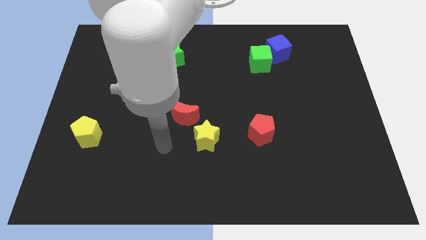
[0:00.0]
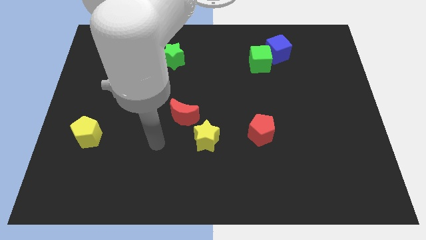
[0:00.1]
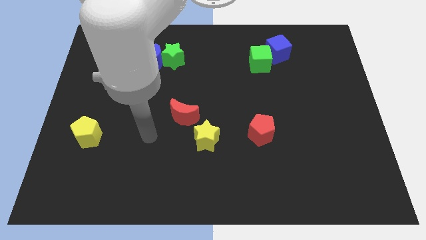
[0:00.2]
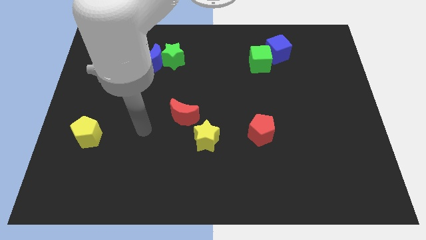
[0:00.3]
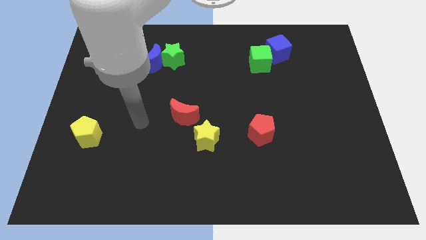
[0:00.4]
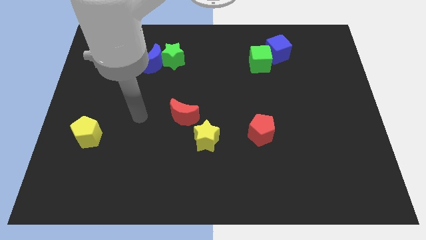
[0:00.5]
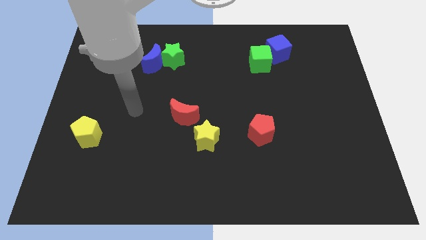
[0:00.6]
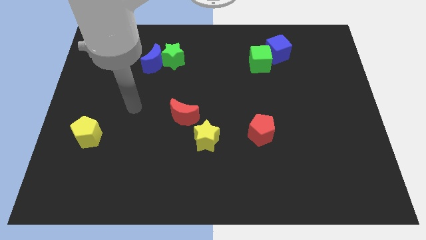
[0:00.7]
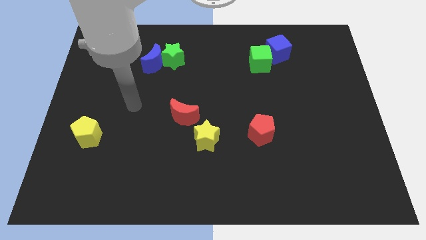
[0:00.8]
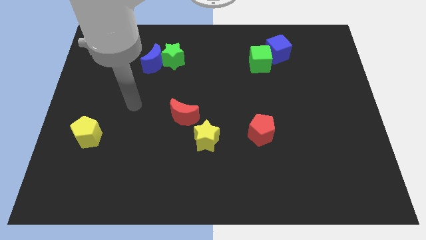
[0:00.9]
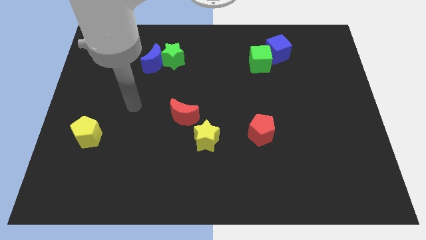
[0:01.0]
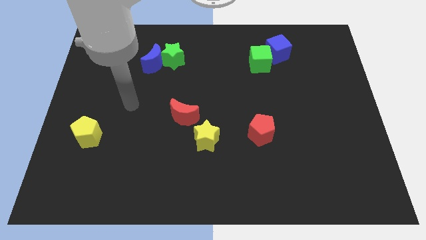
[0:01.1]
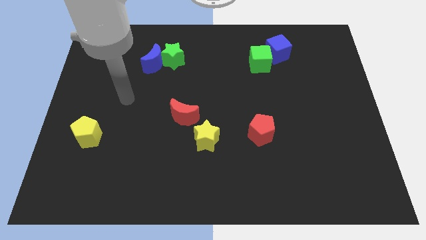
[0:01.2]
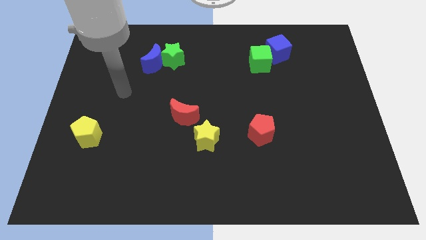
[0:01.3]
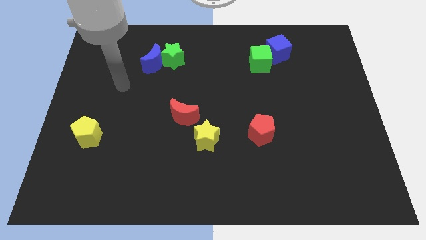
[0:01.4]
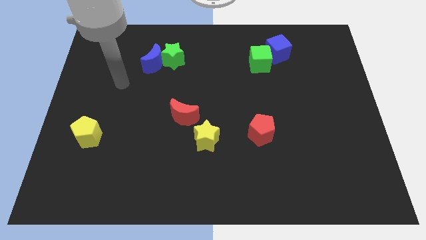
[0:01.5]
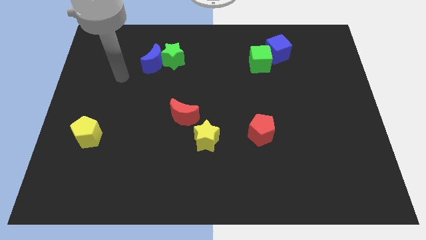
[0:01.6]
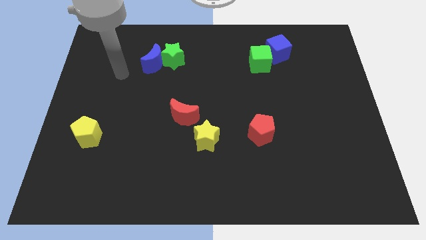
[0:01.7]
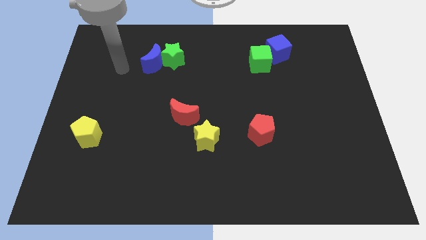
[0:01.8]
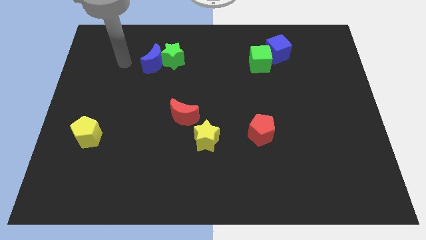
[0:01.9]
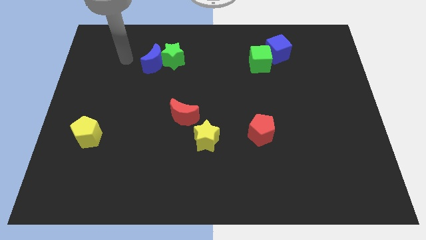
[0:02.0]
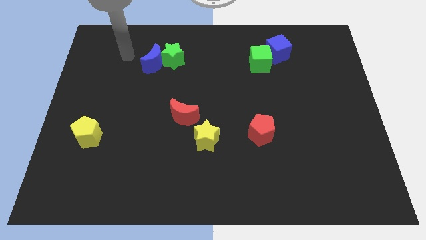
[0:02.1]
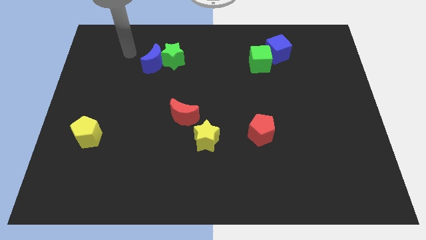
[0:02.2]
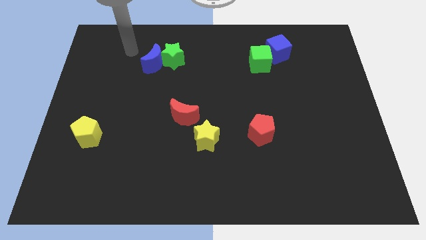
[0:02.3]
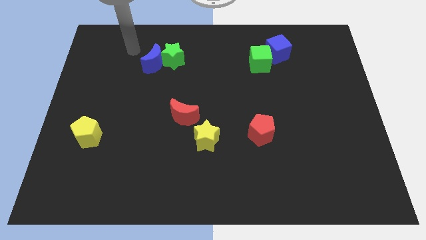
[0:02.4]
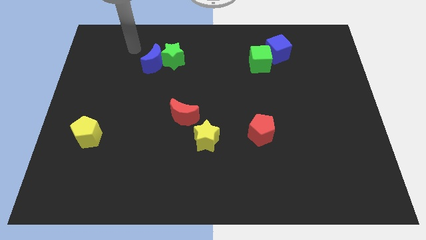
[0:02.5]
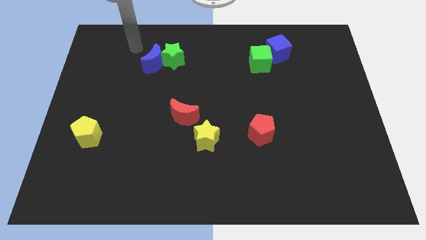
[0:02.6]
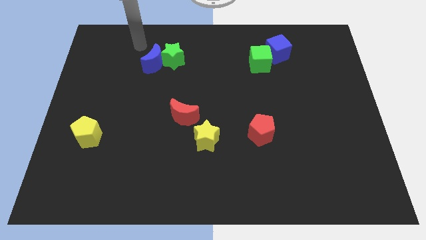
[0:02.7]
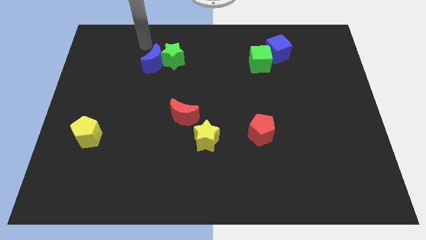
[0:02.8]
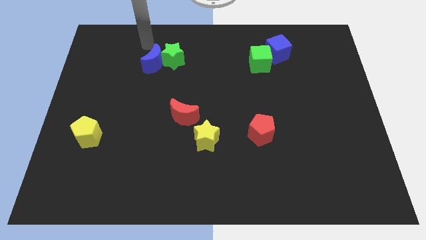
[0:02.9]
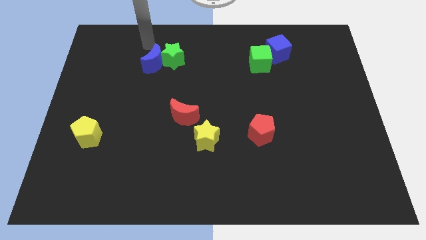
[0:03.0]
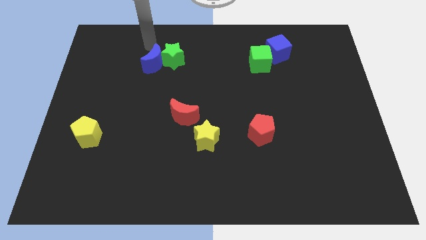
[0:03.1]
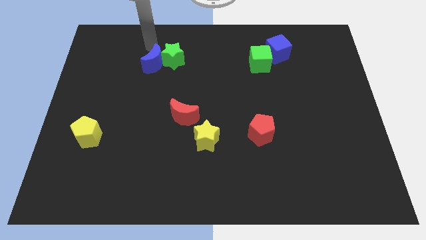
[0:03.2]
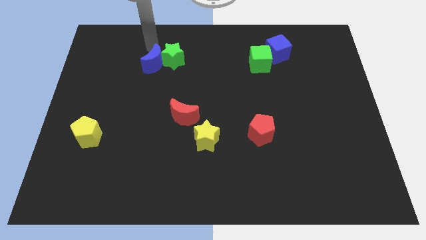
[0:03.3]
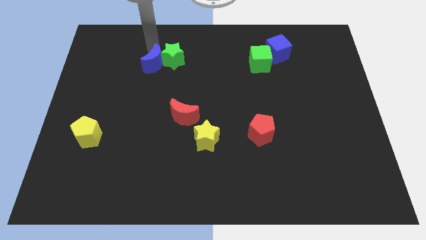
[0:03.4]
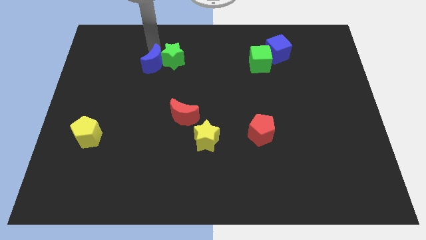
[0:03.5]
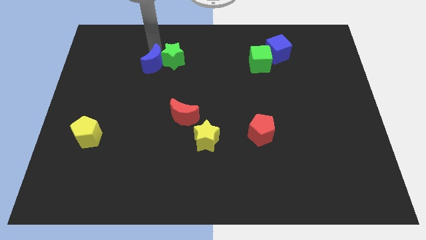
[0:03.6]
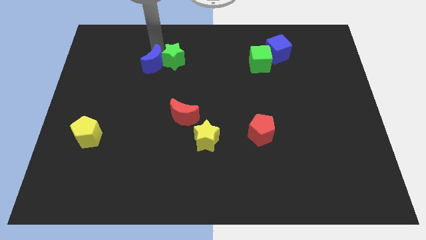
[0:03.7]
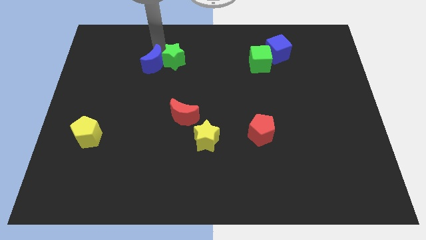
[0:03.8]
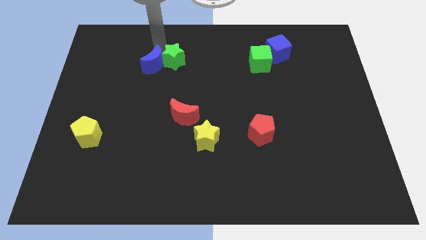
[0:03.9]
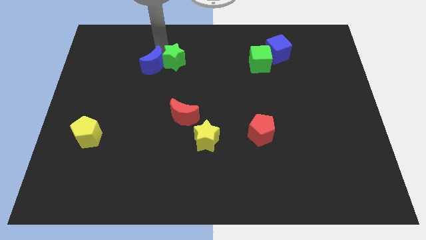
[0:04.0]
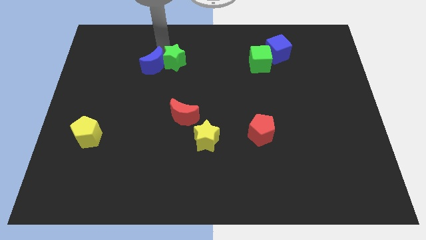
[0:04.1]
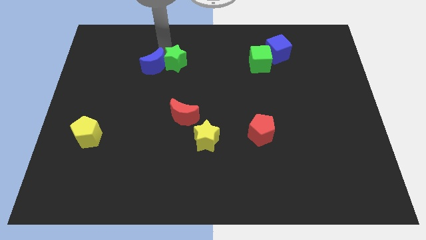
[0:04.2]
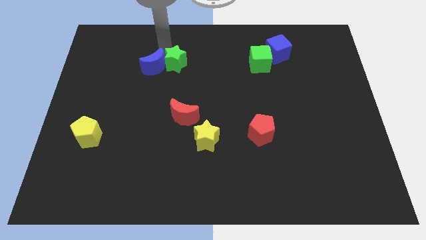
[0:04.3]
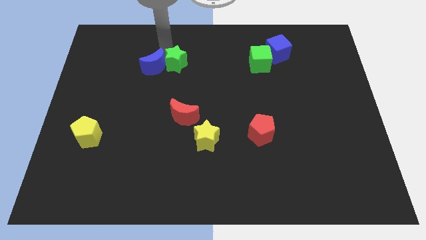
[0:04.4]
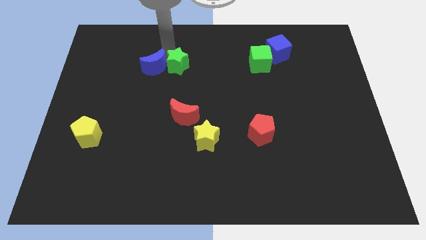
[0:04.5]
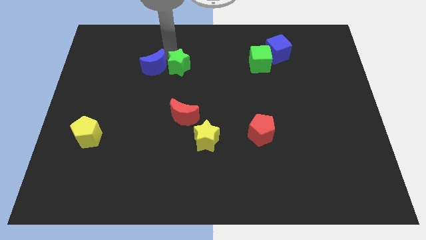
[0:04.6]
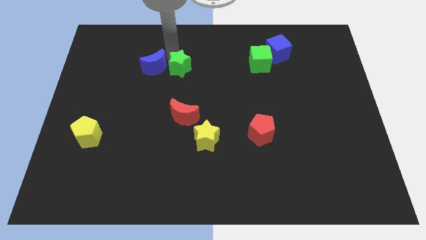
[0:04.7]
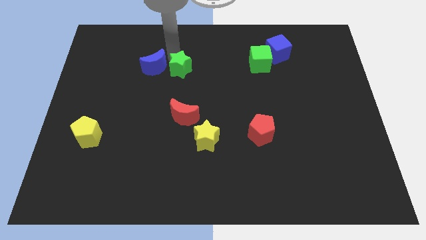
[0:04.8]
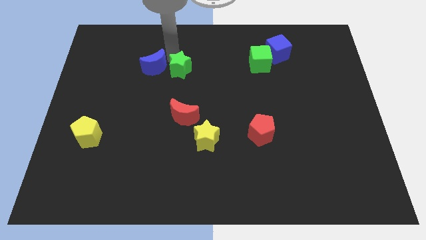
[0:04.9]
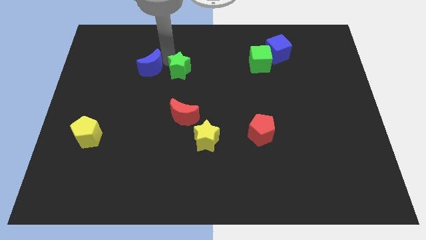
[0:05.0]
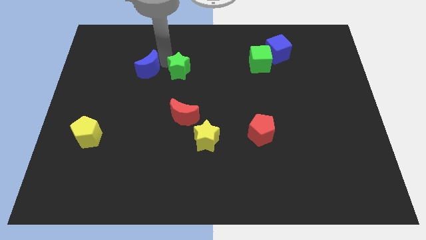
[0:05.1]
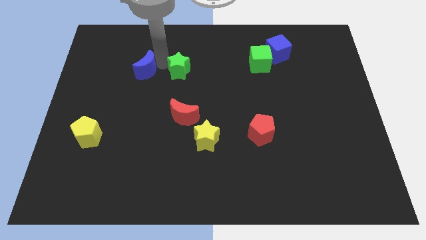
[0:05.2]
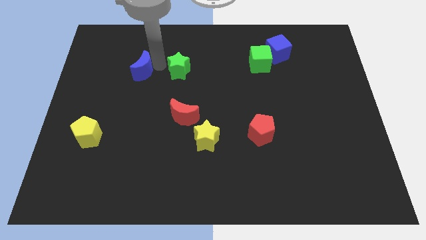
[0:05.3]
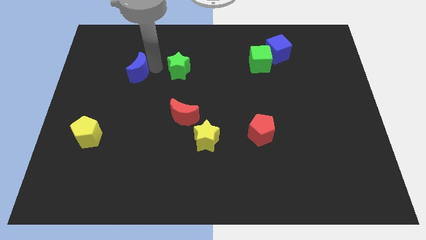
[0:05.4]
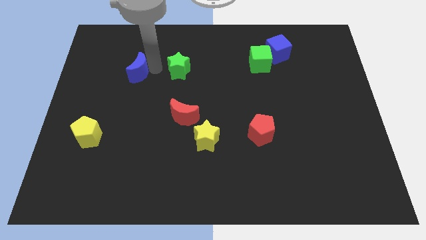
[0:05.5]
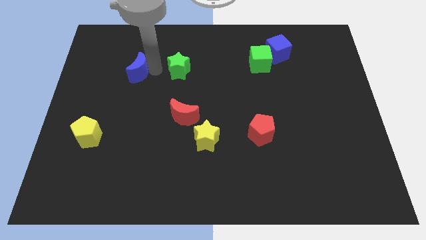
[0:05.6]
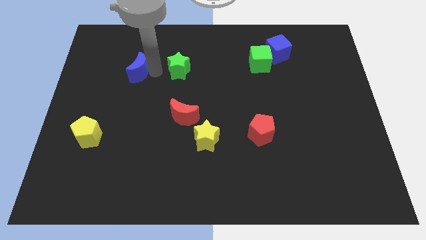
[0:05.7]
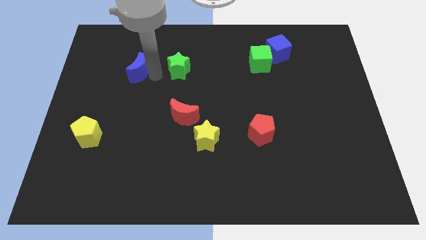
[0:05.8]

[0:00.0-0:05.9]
separate the green star and the blue crescent

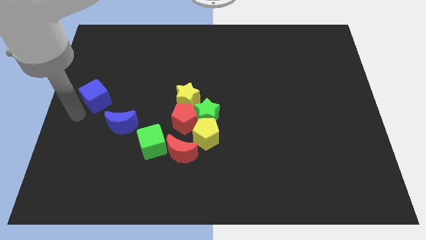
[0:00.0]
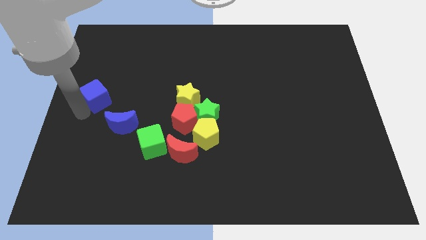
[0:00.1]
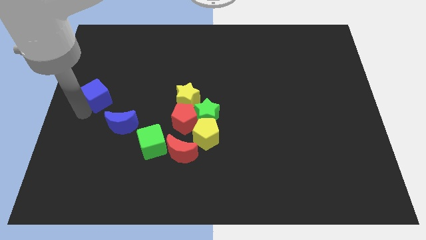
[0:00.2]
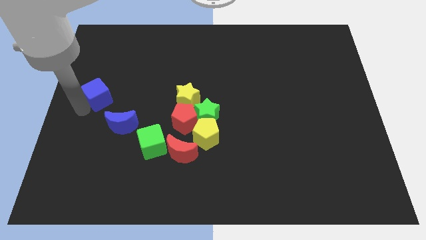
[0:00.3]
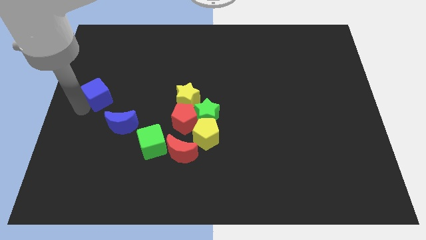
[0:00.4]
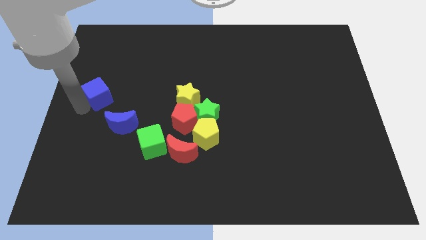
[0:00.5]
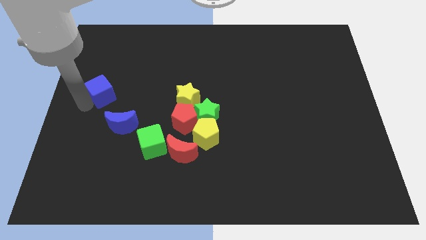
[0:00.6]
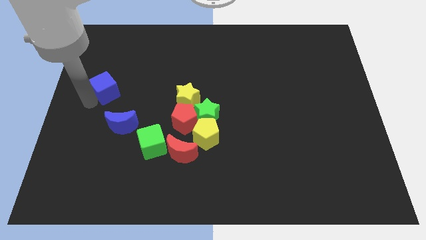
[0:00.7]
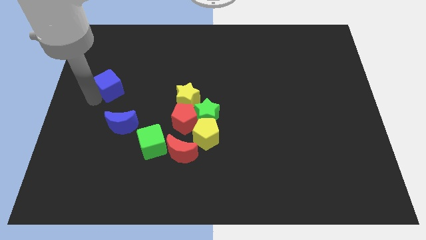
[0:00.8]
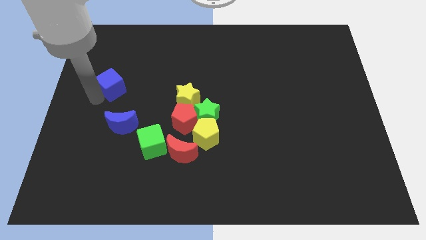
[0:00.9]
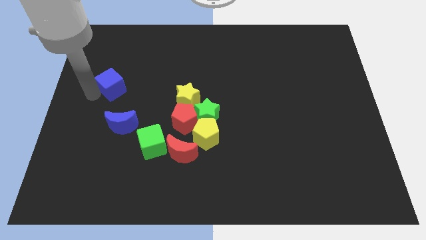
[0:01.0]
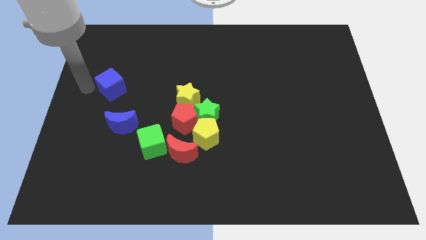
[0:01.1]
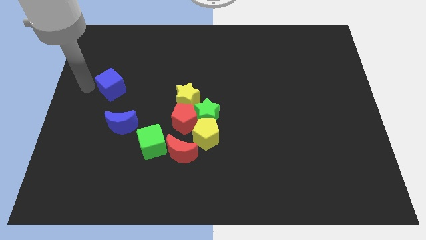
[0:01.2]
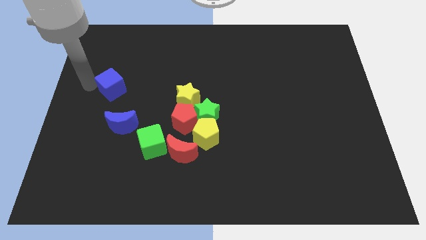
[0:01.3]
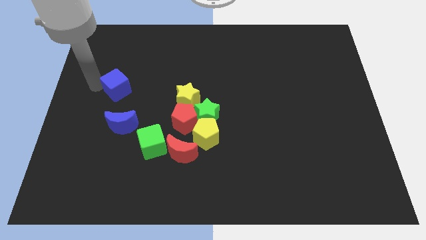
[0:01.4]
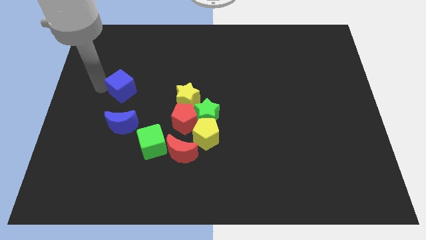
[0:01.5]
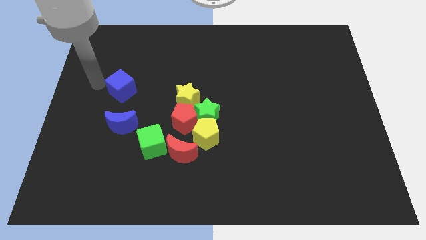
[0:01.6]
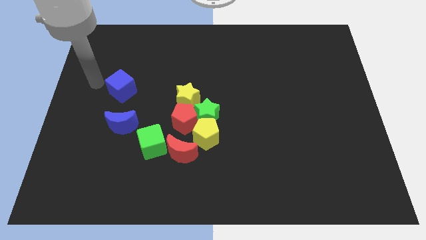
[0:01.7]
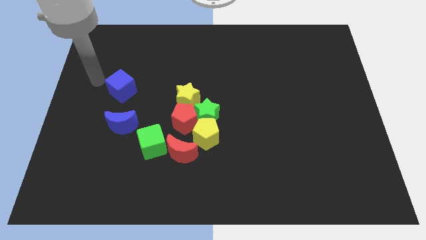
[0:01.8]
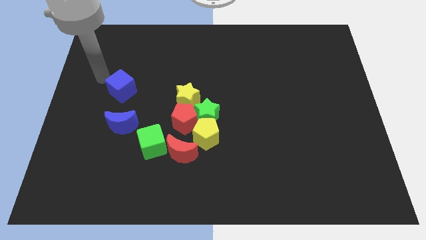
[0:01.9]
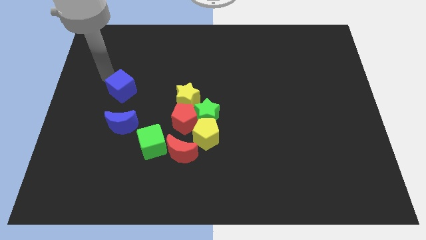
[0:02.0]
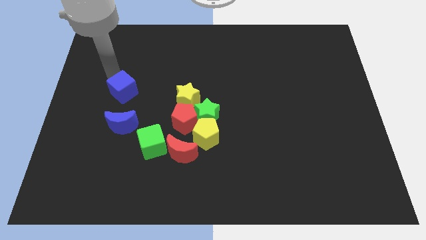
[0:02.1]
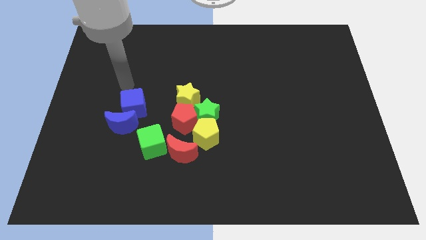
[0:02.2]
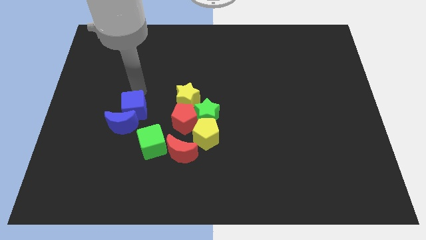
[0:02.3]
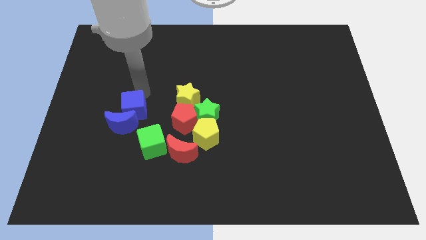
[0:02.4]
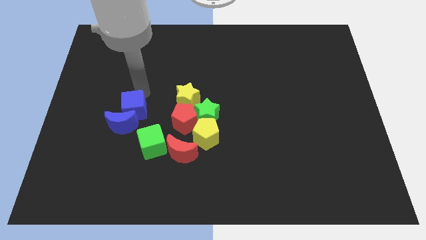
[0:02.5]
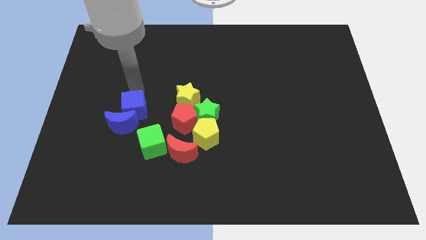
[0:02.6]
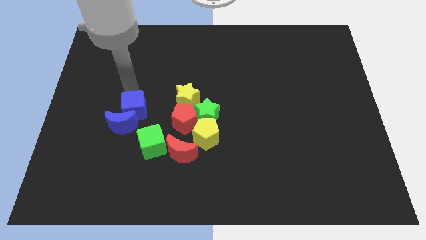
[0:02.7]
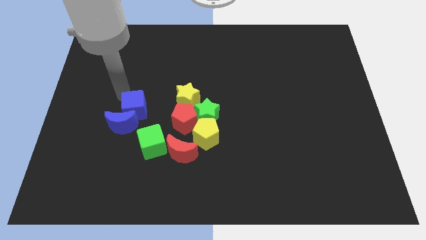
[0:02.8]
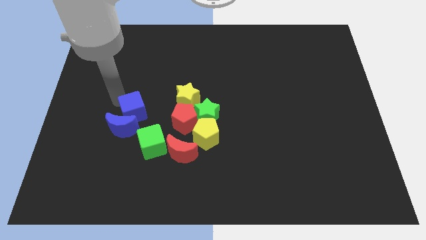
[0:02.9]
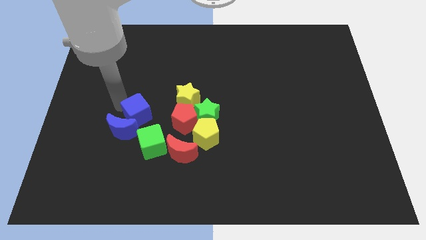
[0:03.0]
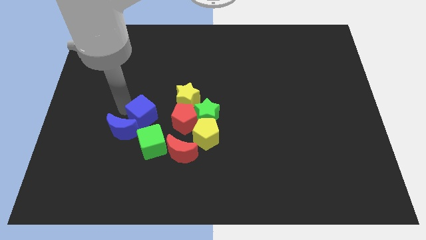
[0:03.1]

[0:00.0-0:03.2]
place blue cube to the top of green cube

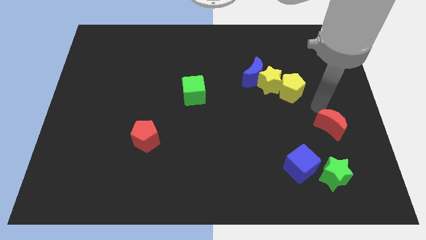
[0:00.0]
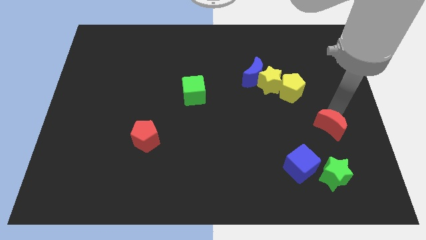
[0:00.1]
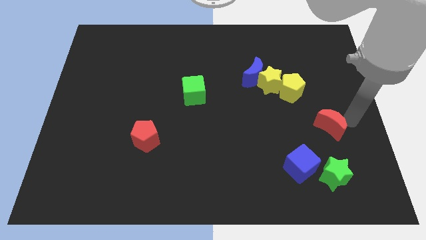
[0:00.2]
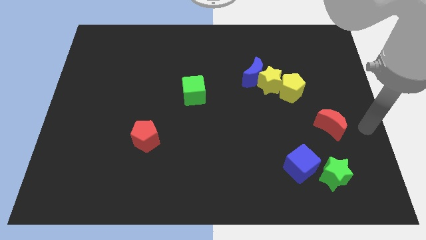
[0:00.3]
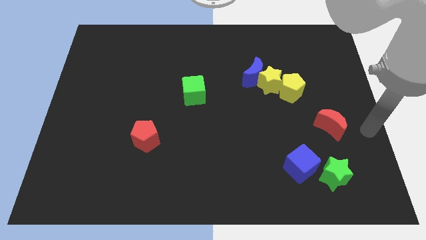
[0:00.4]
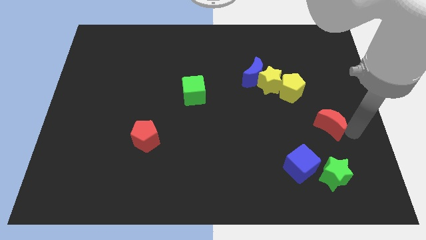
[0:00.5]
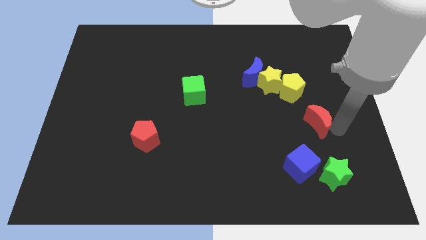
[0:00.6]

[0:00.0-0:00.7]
move your arm around the red moon
